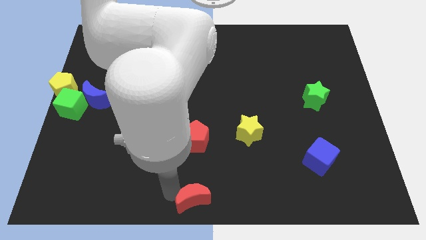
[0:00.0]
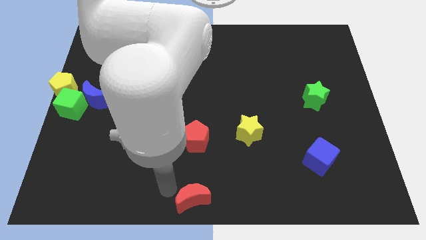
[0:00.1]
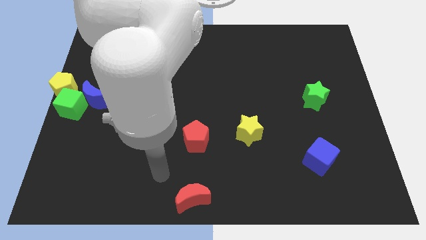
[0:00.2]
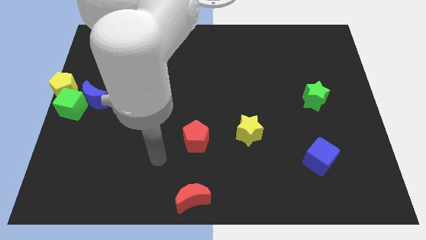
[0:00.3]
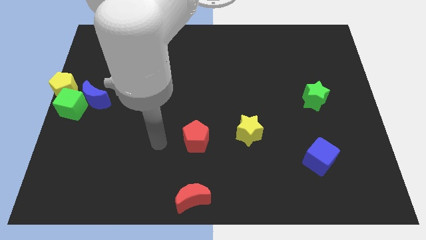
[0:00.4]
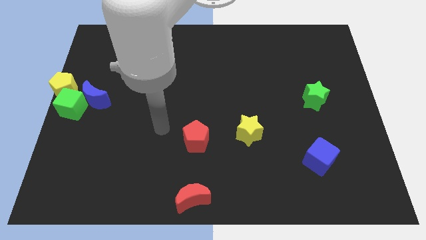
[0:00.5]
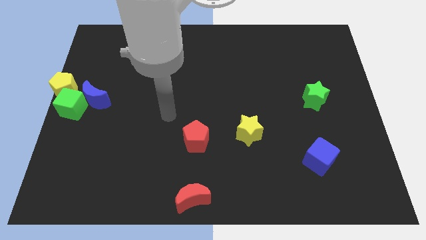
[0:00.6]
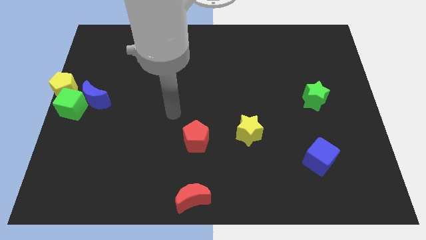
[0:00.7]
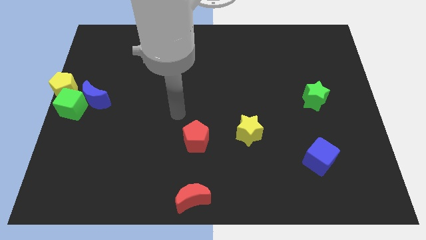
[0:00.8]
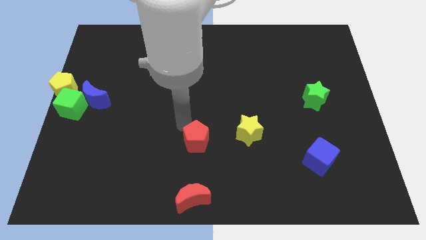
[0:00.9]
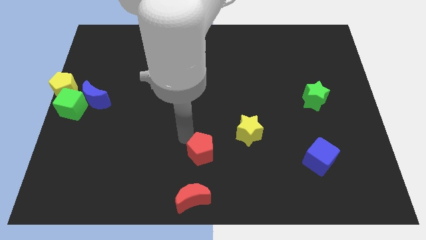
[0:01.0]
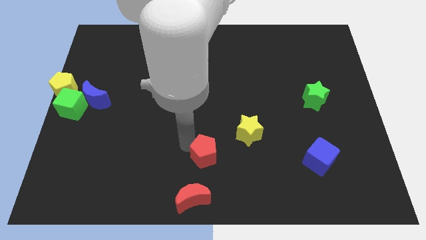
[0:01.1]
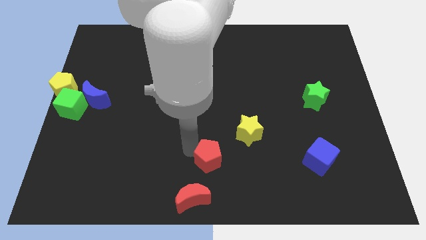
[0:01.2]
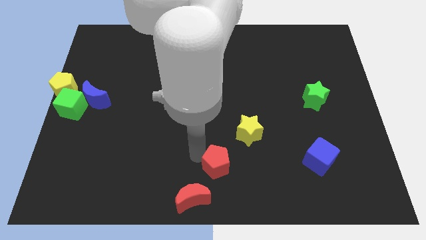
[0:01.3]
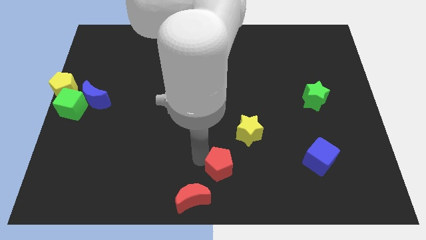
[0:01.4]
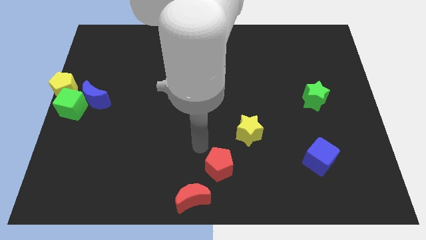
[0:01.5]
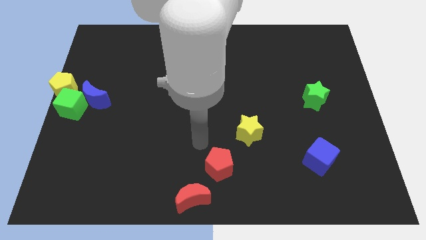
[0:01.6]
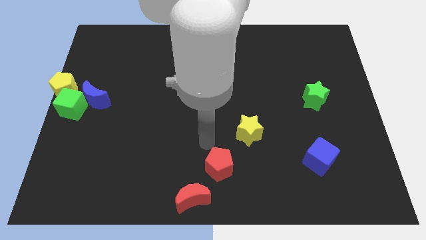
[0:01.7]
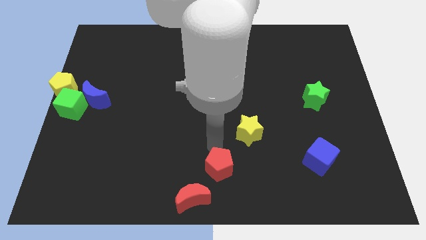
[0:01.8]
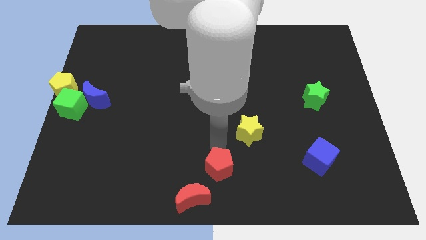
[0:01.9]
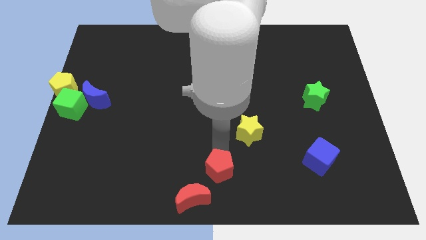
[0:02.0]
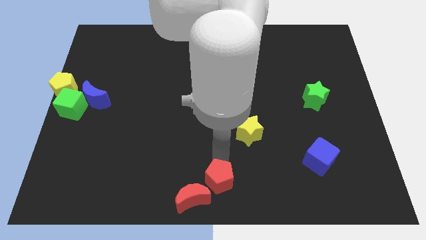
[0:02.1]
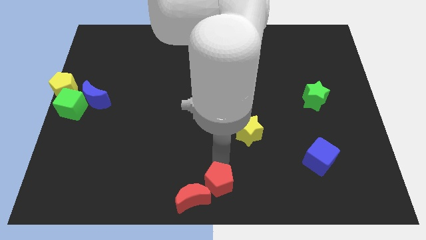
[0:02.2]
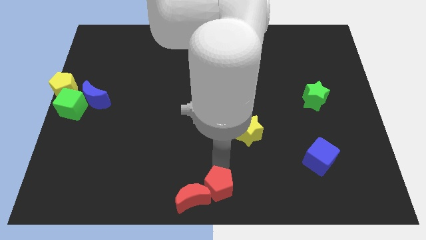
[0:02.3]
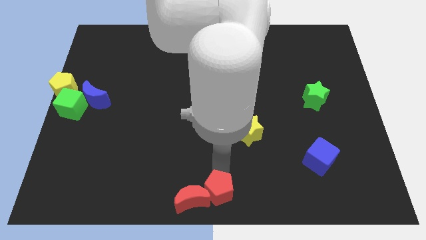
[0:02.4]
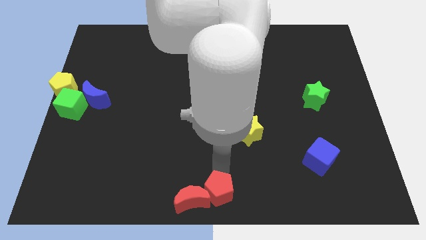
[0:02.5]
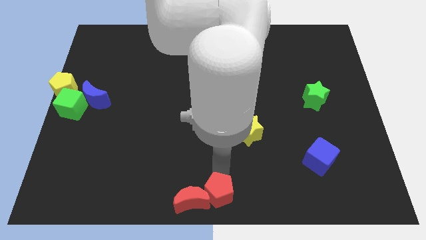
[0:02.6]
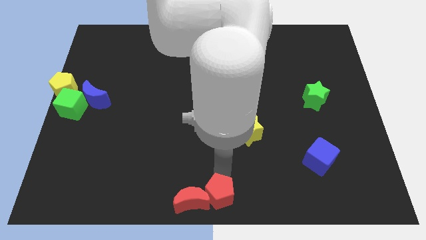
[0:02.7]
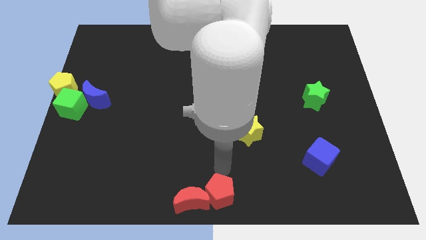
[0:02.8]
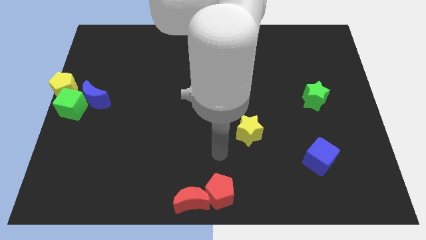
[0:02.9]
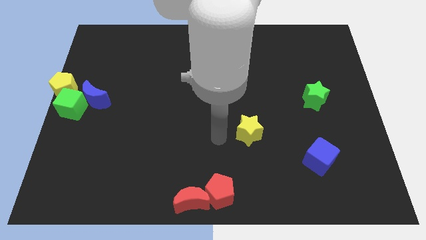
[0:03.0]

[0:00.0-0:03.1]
place red pentagon to the right of red moon

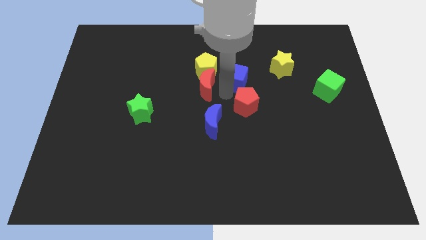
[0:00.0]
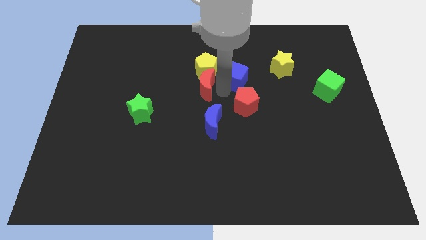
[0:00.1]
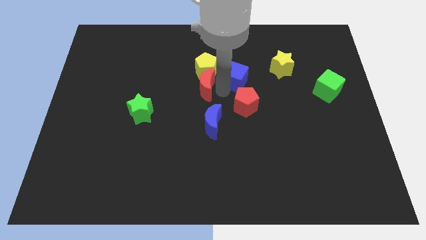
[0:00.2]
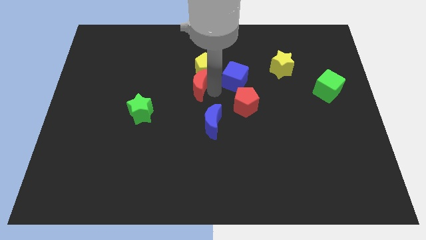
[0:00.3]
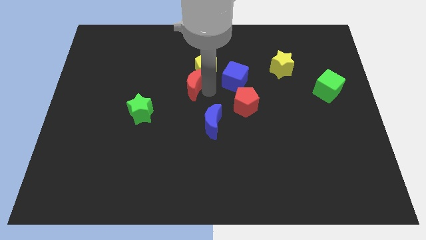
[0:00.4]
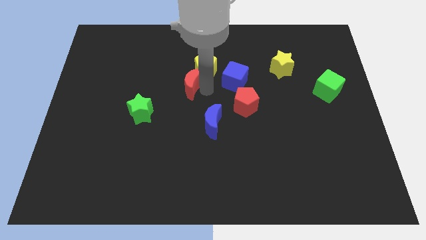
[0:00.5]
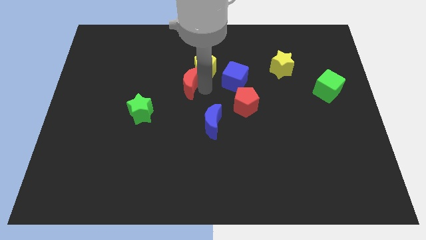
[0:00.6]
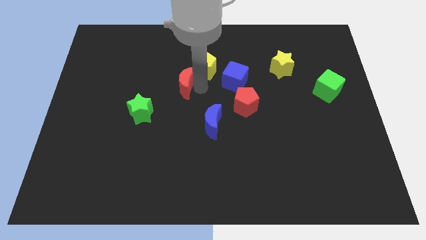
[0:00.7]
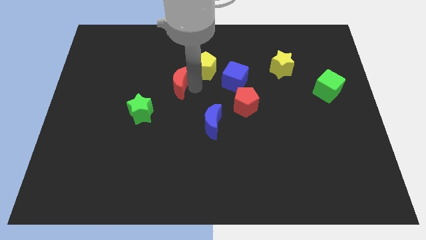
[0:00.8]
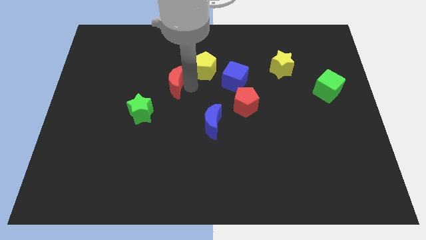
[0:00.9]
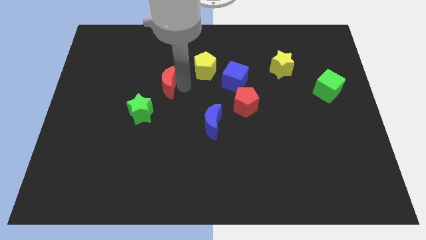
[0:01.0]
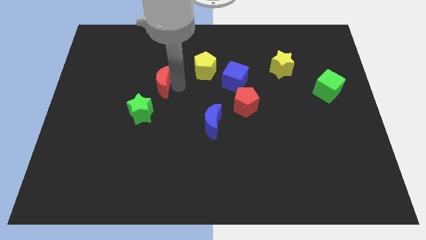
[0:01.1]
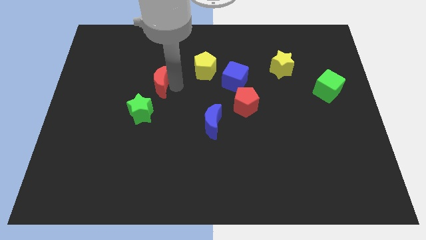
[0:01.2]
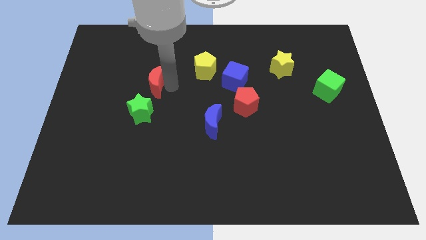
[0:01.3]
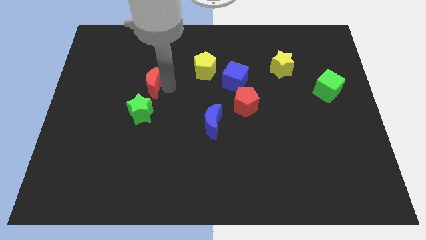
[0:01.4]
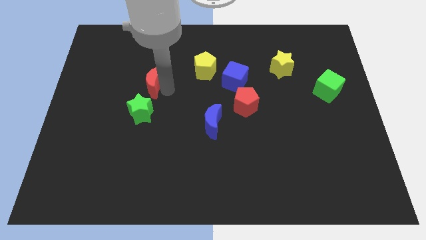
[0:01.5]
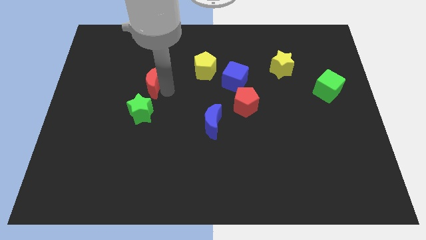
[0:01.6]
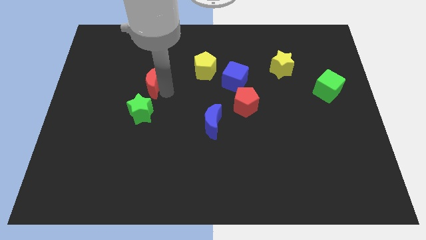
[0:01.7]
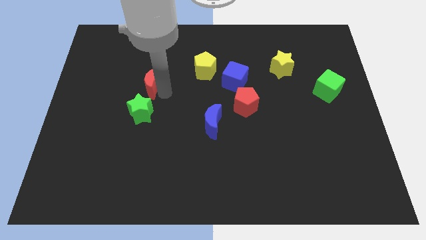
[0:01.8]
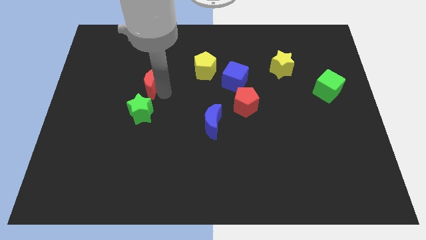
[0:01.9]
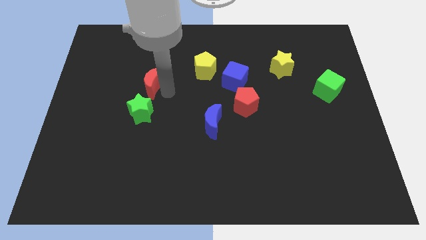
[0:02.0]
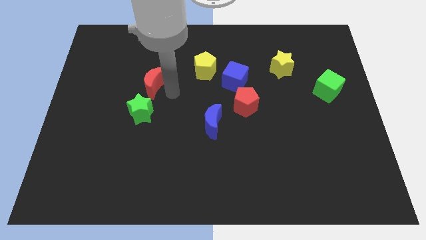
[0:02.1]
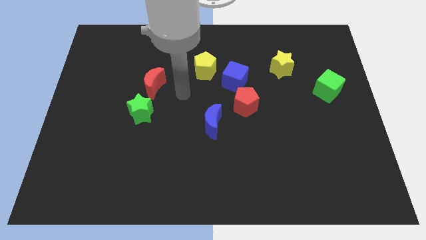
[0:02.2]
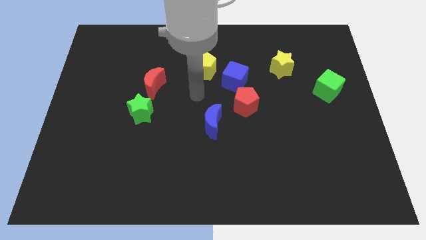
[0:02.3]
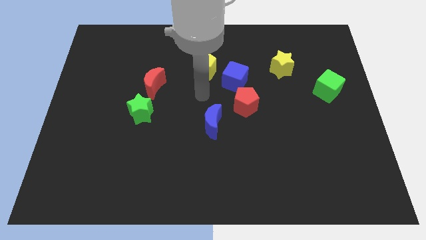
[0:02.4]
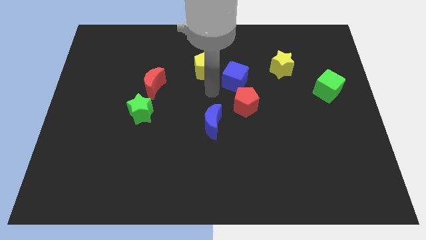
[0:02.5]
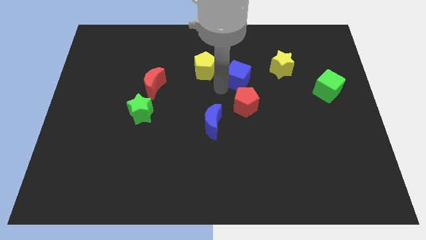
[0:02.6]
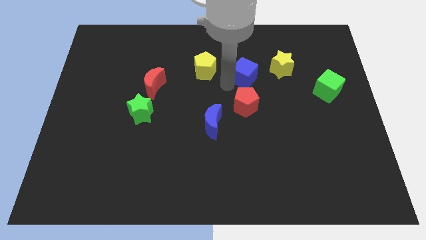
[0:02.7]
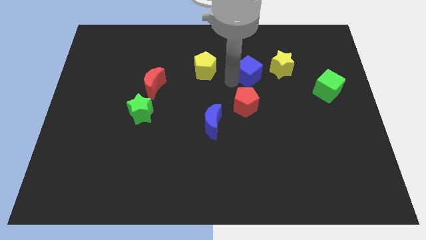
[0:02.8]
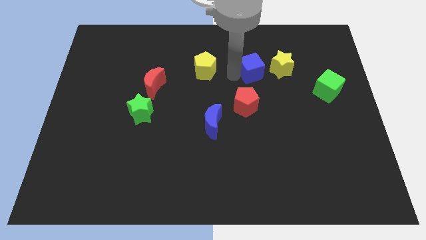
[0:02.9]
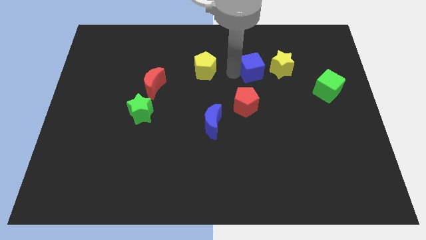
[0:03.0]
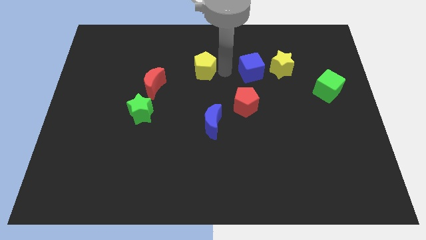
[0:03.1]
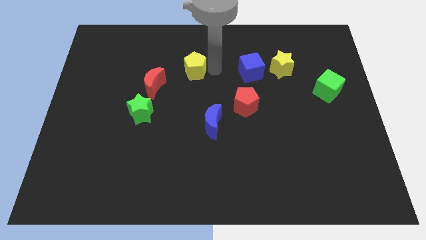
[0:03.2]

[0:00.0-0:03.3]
separate the red moon from the group of blocks

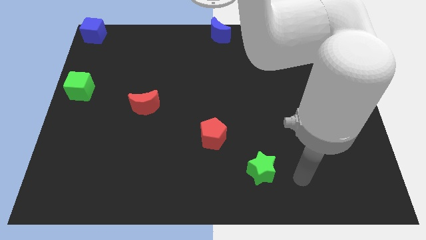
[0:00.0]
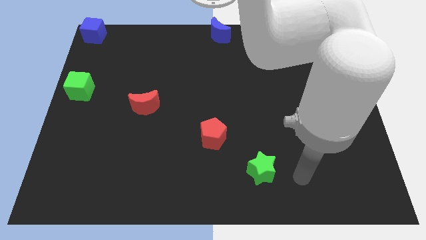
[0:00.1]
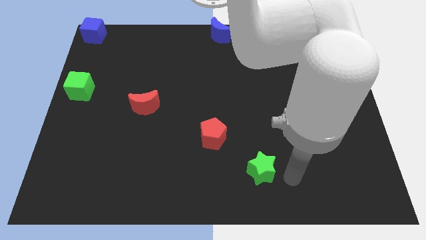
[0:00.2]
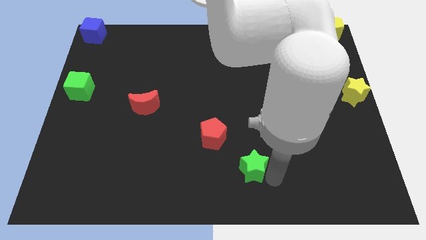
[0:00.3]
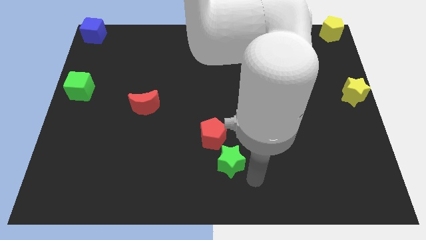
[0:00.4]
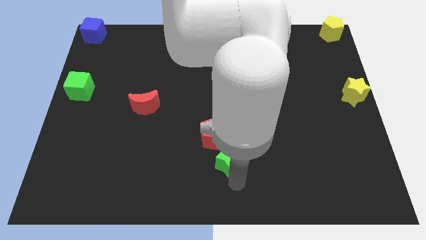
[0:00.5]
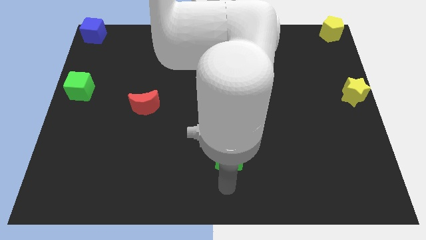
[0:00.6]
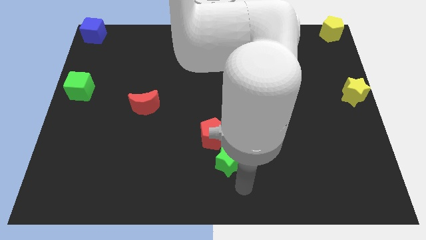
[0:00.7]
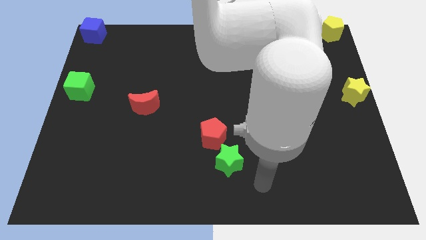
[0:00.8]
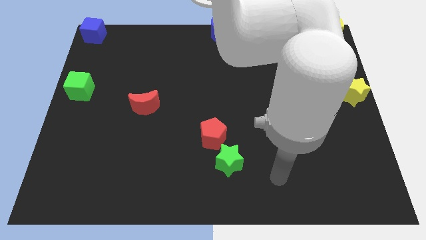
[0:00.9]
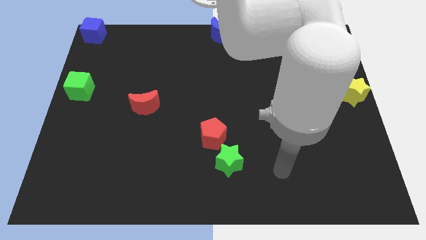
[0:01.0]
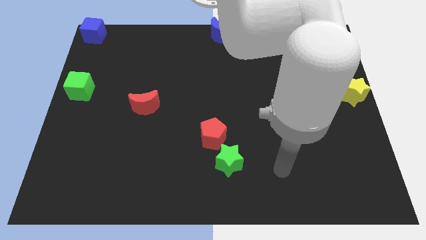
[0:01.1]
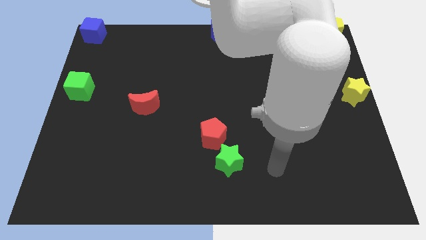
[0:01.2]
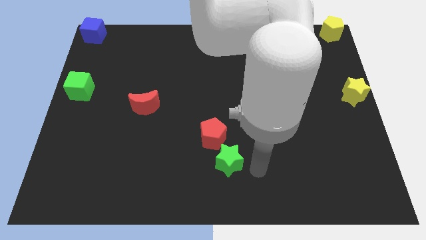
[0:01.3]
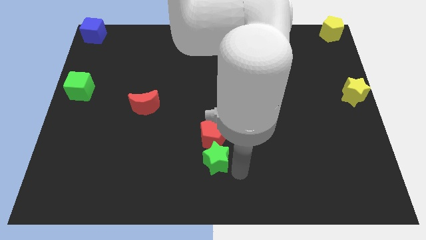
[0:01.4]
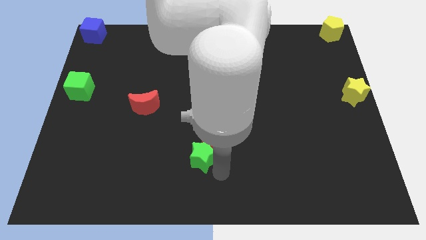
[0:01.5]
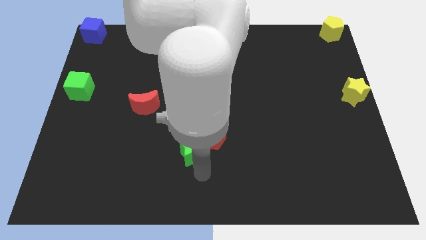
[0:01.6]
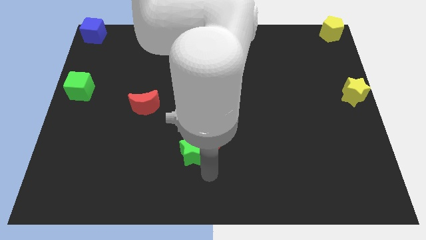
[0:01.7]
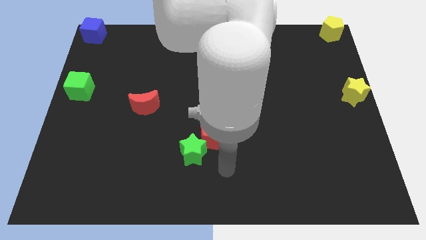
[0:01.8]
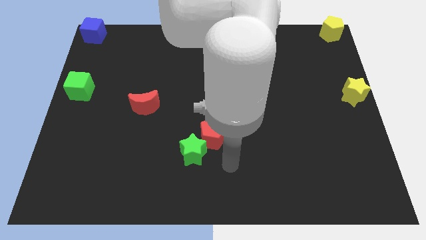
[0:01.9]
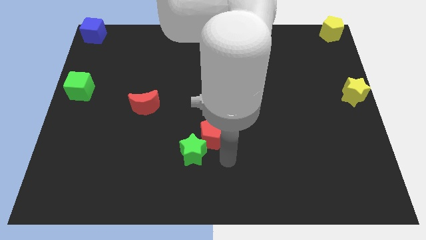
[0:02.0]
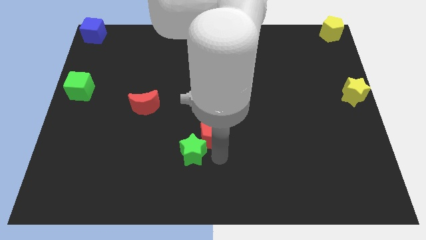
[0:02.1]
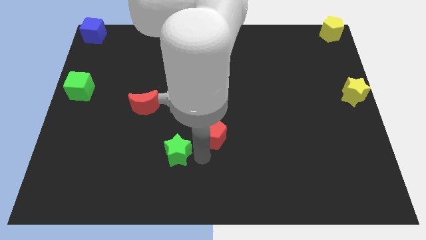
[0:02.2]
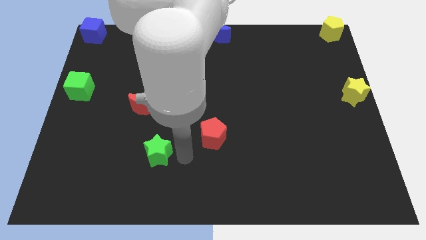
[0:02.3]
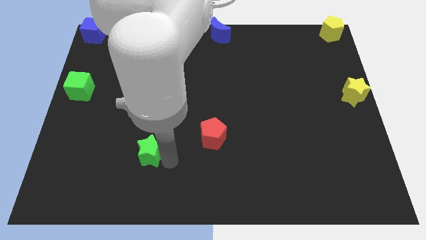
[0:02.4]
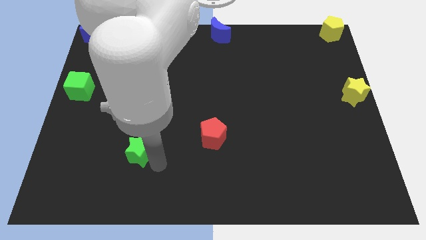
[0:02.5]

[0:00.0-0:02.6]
move the green star to the bottom of the red crescent

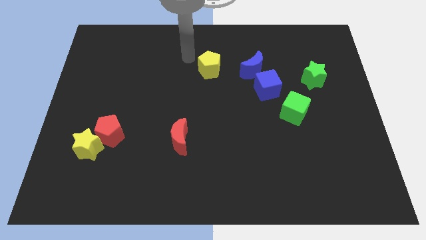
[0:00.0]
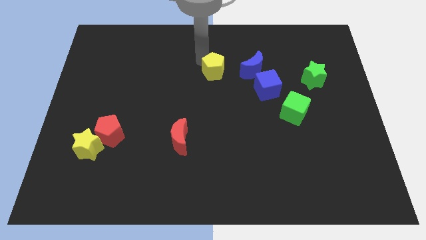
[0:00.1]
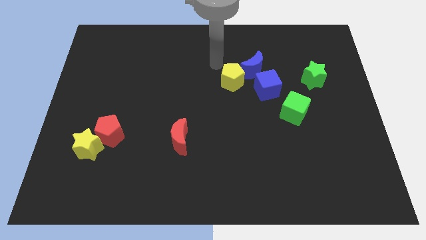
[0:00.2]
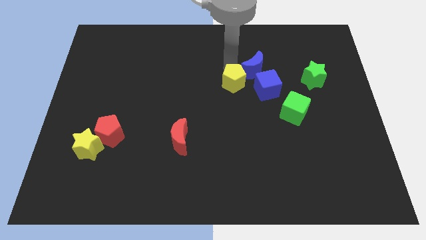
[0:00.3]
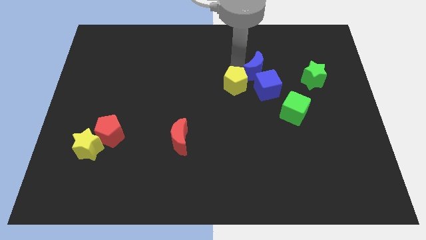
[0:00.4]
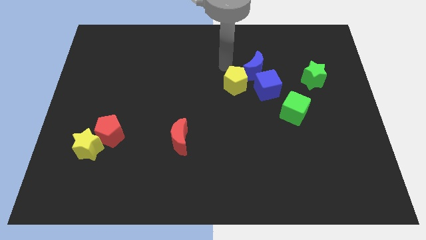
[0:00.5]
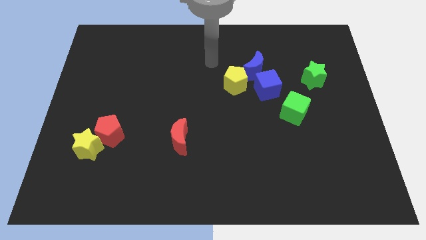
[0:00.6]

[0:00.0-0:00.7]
move the yellow pentagon below the blue crescent
